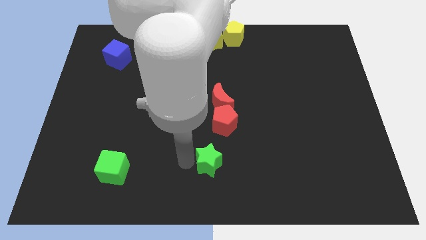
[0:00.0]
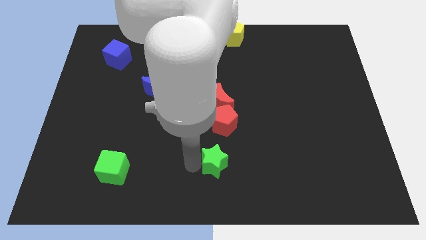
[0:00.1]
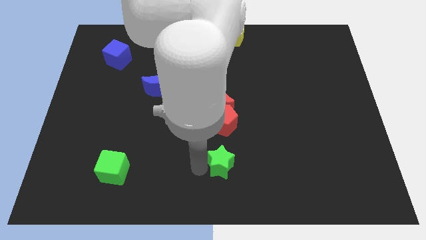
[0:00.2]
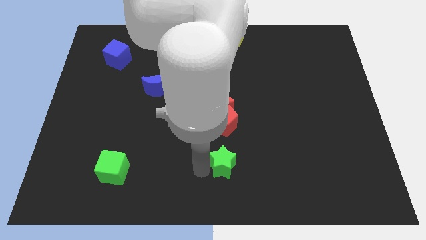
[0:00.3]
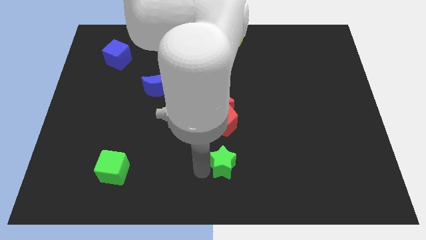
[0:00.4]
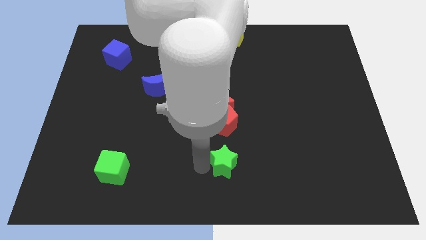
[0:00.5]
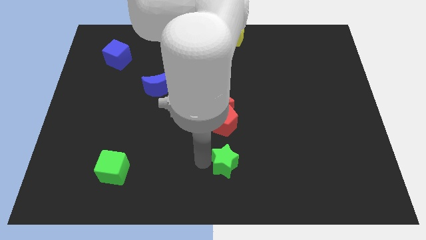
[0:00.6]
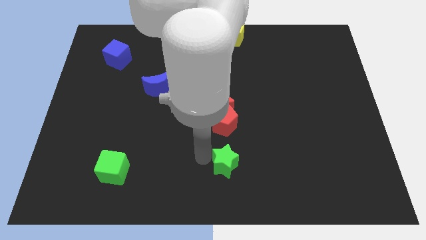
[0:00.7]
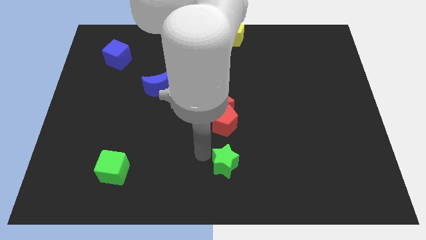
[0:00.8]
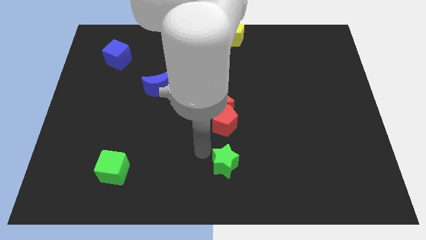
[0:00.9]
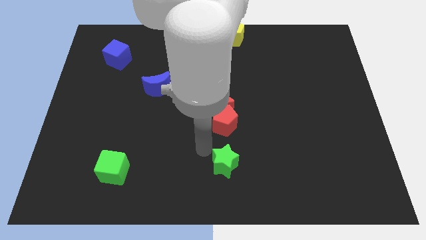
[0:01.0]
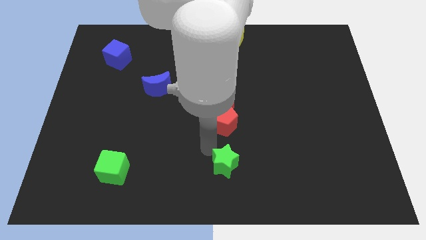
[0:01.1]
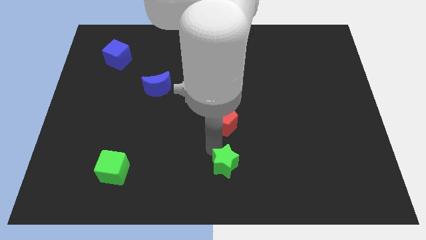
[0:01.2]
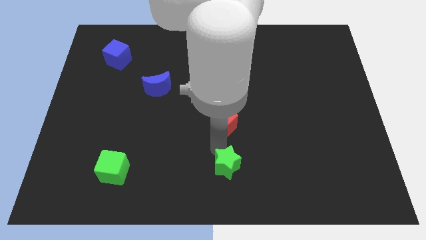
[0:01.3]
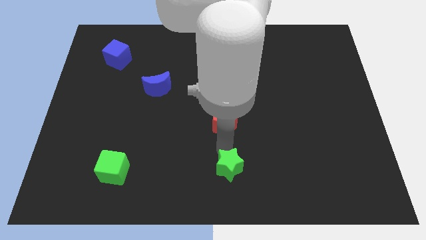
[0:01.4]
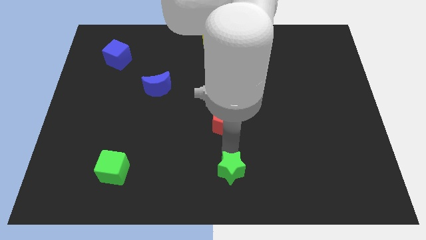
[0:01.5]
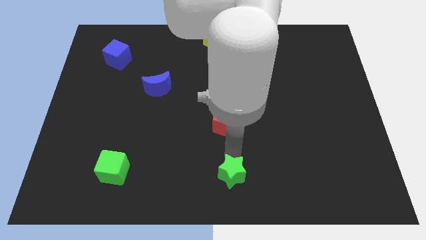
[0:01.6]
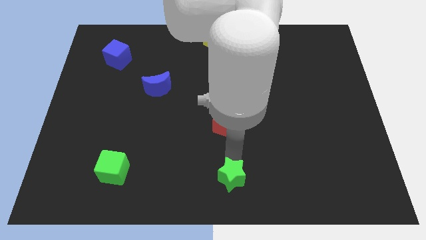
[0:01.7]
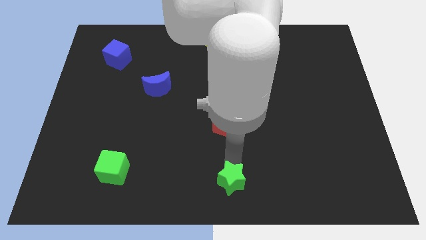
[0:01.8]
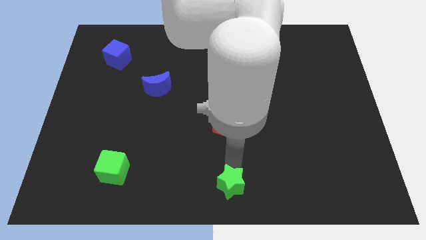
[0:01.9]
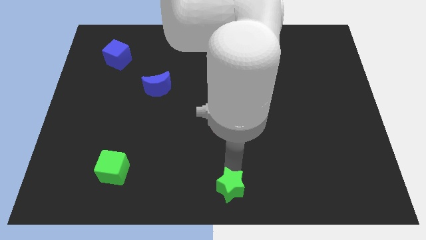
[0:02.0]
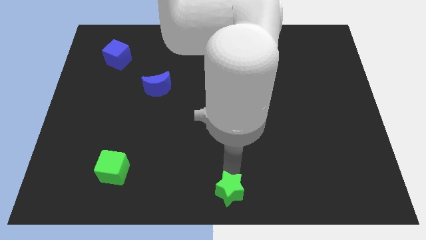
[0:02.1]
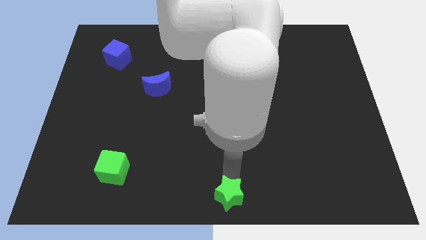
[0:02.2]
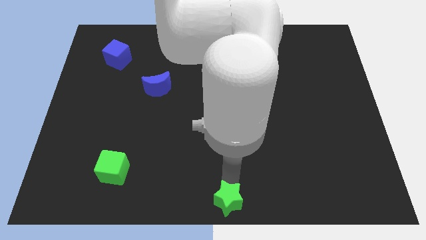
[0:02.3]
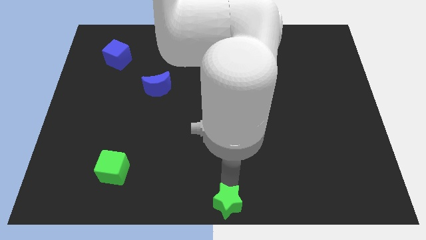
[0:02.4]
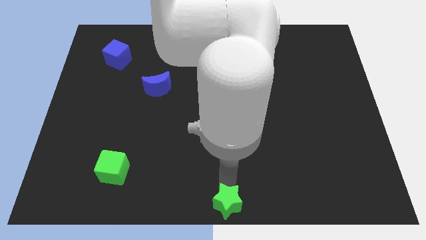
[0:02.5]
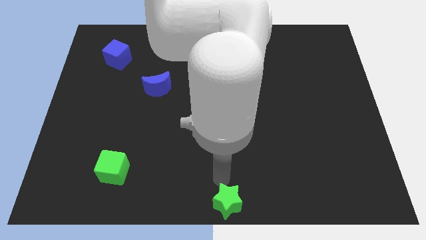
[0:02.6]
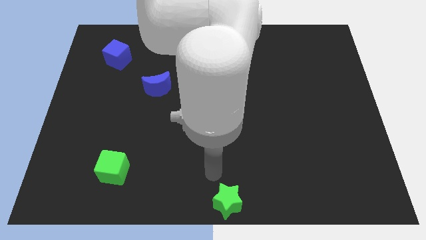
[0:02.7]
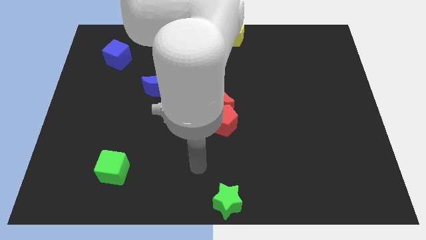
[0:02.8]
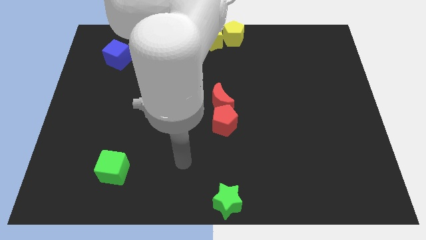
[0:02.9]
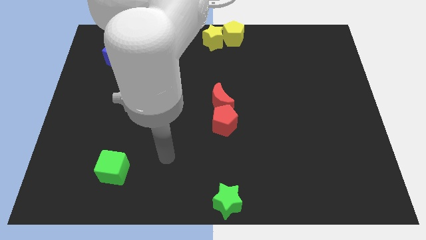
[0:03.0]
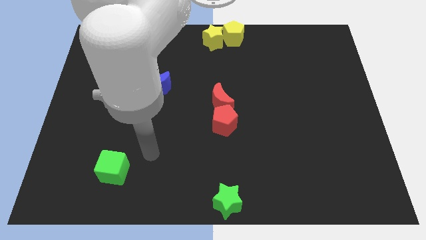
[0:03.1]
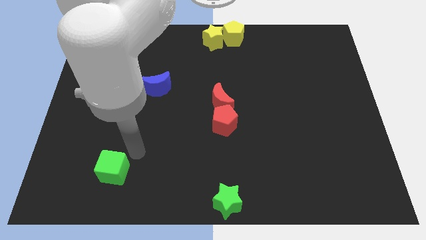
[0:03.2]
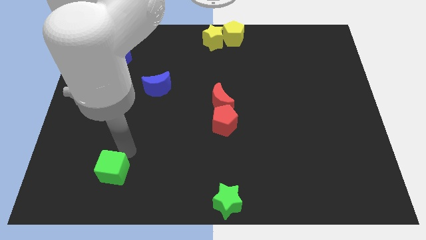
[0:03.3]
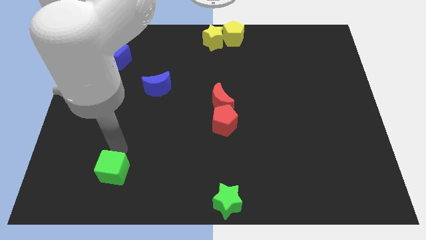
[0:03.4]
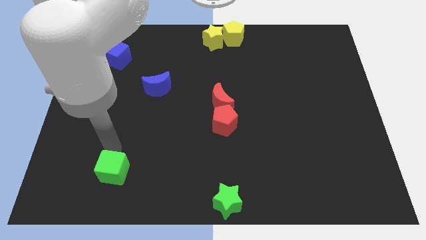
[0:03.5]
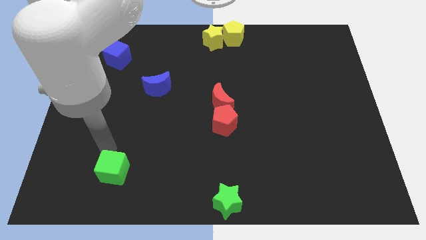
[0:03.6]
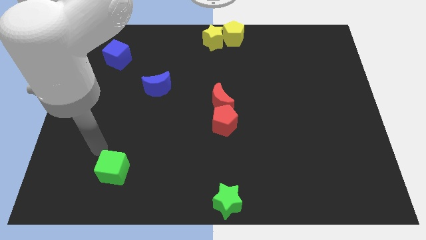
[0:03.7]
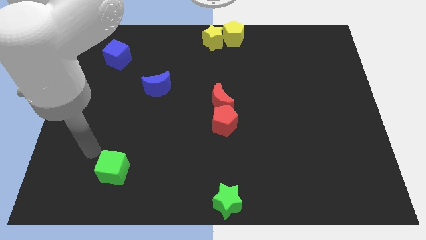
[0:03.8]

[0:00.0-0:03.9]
move the green star to the center bottom

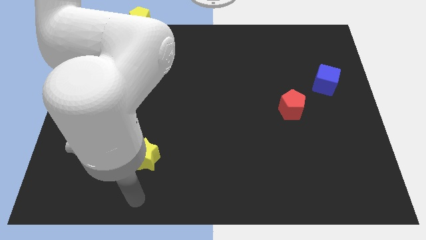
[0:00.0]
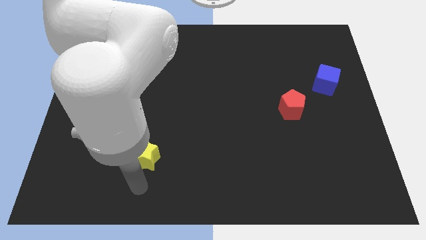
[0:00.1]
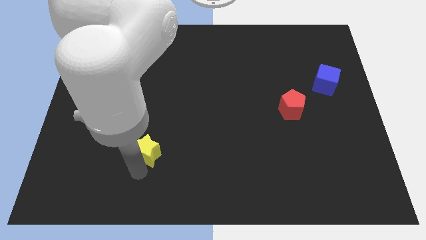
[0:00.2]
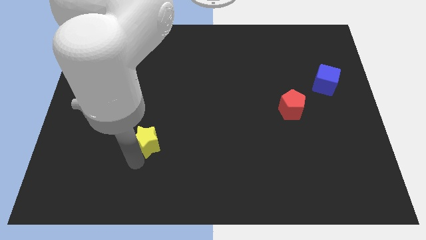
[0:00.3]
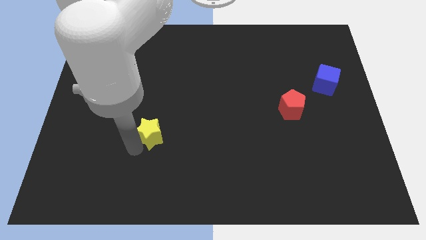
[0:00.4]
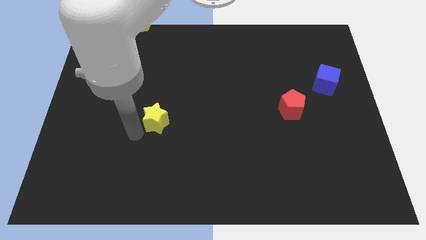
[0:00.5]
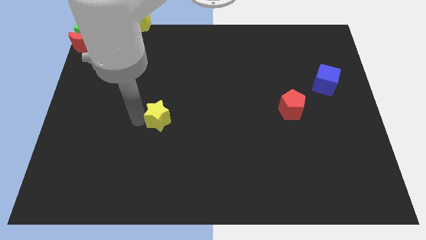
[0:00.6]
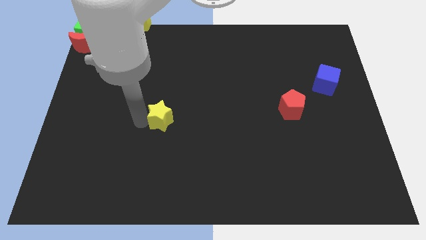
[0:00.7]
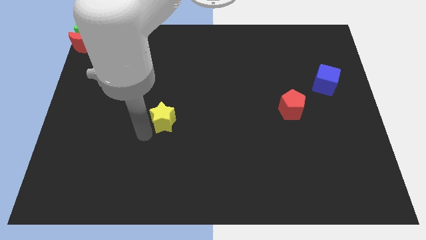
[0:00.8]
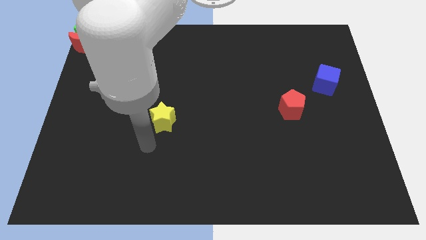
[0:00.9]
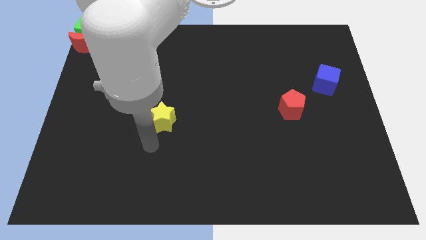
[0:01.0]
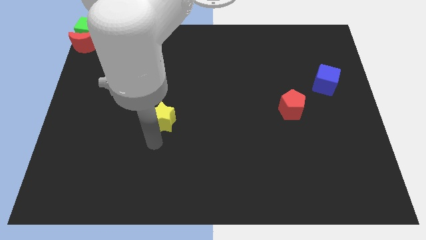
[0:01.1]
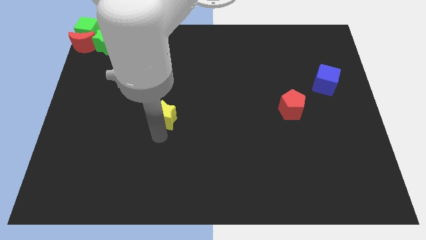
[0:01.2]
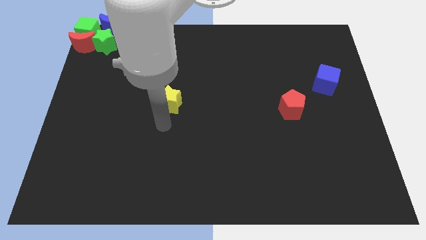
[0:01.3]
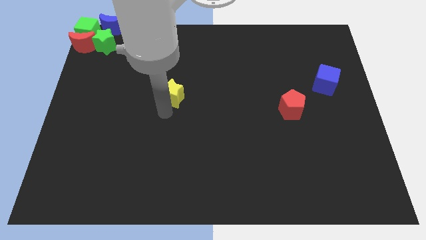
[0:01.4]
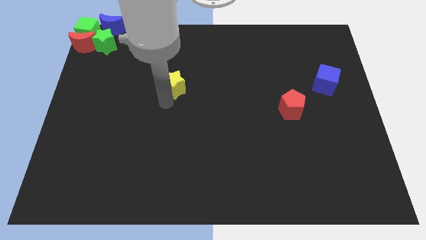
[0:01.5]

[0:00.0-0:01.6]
place the yellow star diagonally bottom right to green star

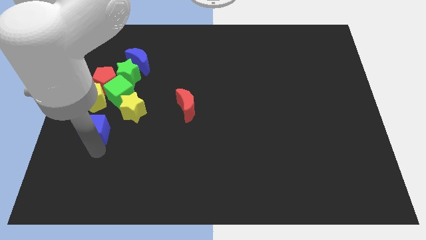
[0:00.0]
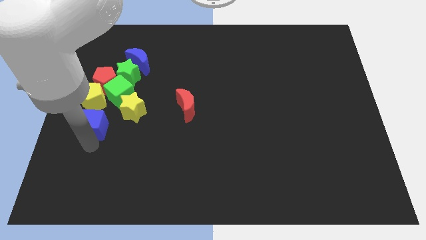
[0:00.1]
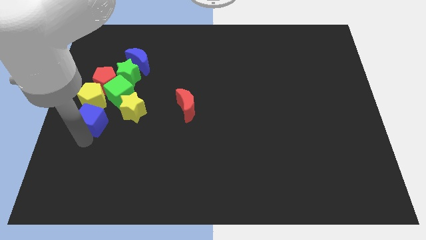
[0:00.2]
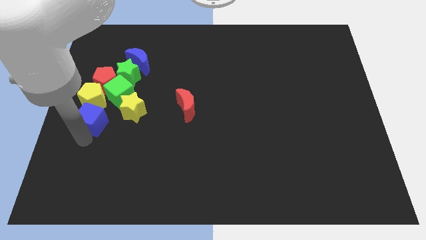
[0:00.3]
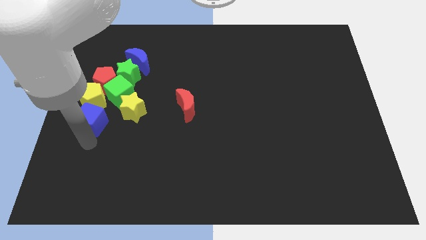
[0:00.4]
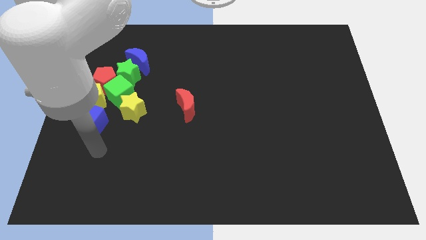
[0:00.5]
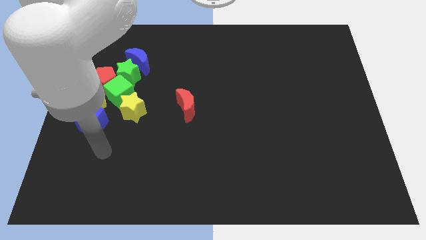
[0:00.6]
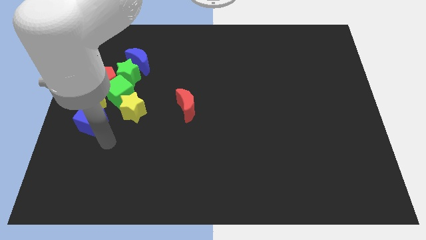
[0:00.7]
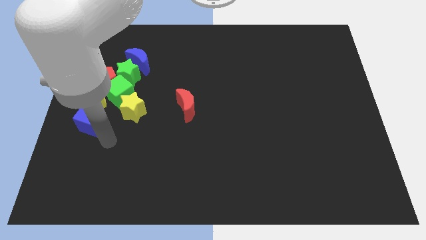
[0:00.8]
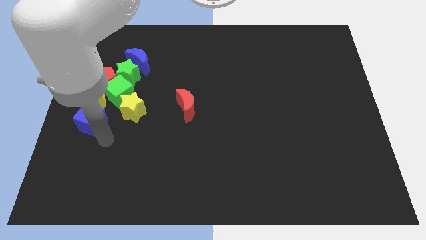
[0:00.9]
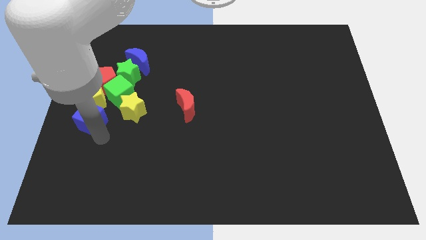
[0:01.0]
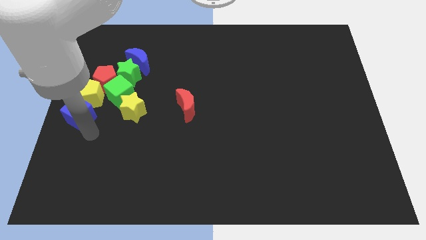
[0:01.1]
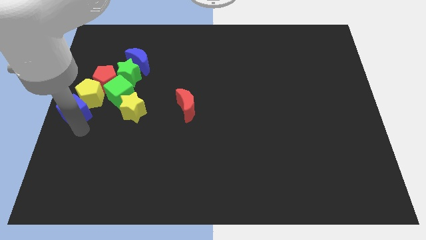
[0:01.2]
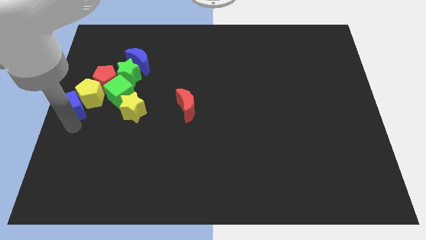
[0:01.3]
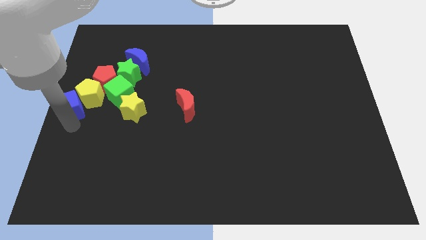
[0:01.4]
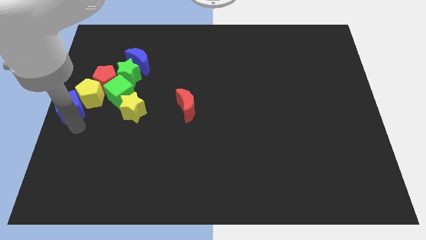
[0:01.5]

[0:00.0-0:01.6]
move the blue cube into the left of the yellow pentagon

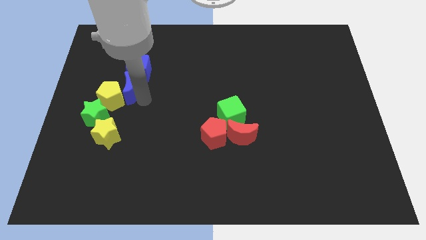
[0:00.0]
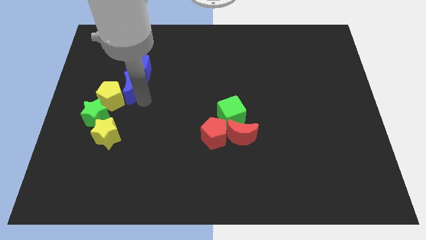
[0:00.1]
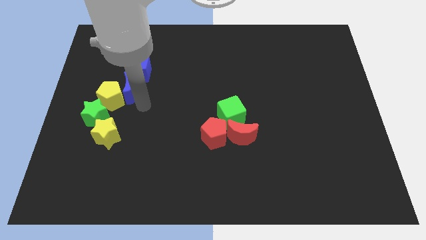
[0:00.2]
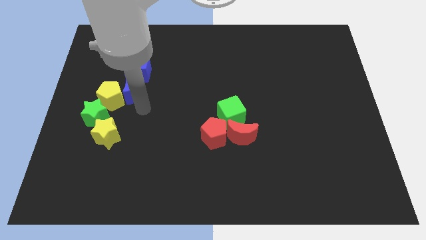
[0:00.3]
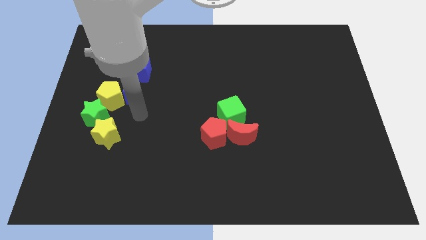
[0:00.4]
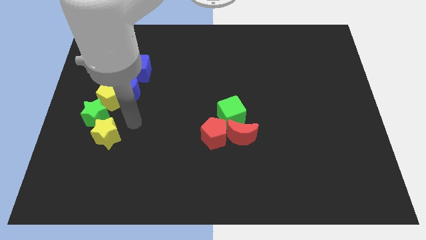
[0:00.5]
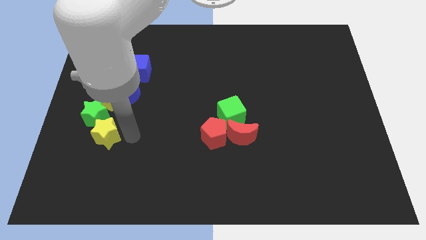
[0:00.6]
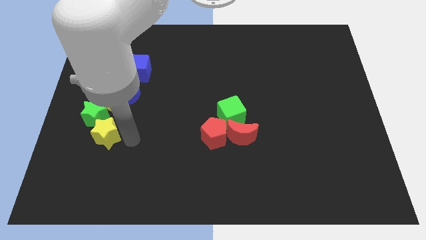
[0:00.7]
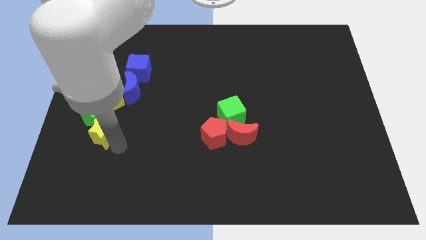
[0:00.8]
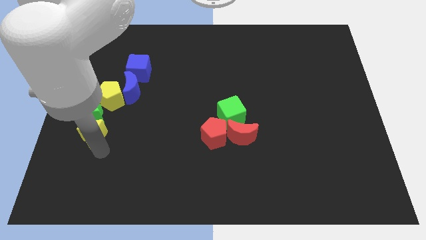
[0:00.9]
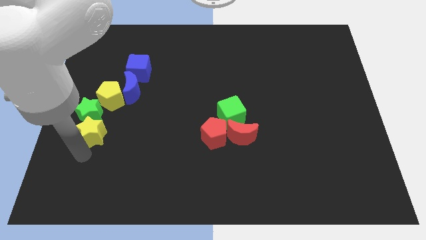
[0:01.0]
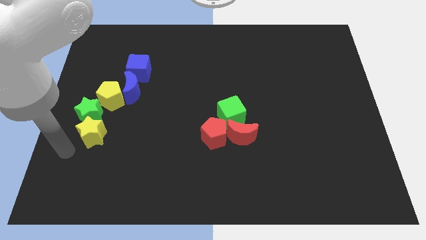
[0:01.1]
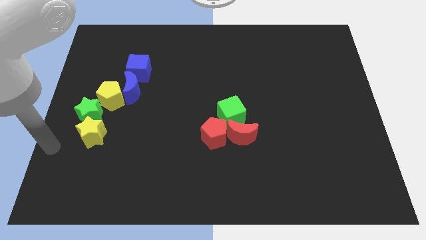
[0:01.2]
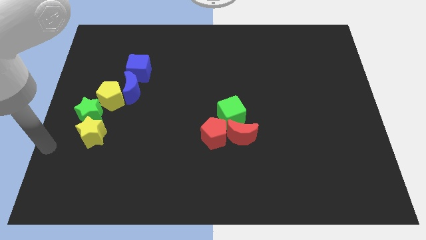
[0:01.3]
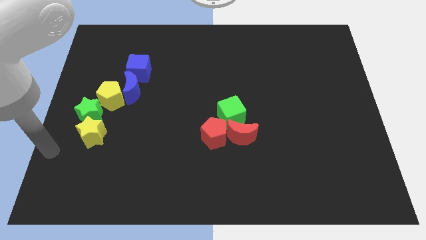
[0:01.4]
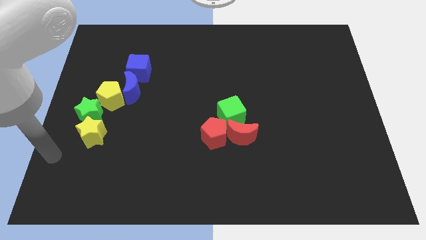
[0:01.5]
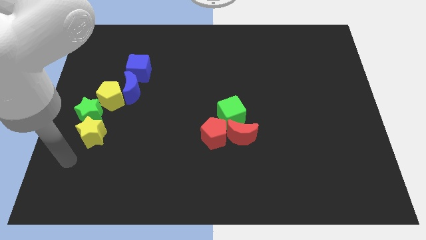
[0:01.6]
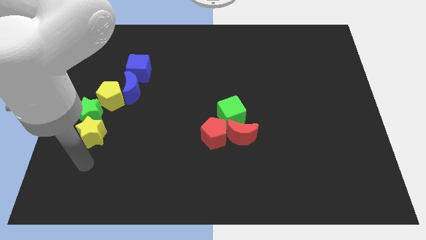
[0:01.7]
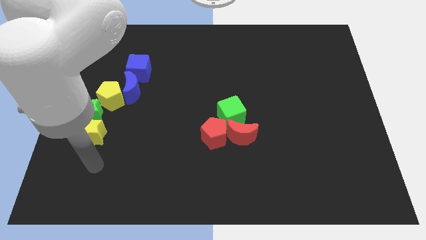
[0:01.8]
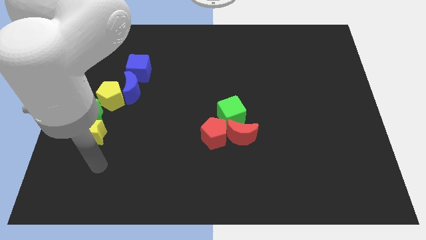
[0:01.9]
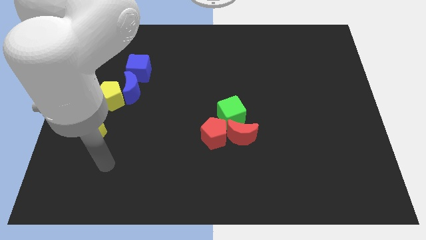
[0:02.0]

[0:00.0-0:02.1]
point your arm to bottom of the yellow star
